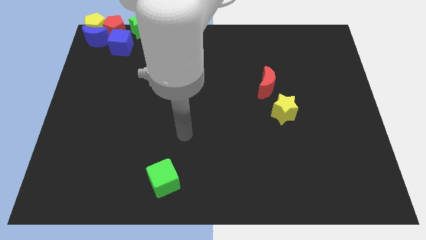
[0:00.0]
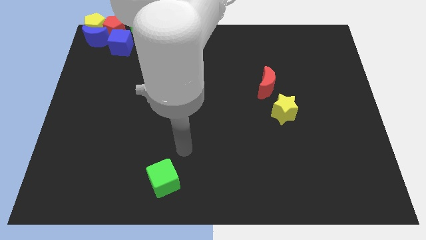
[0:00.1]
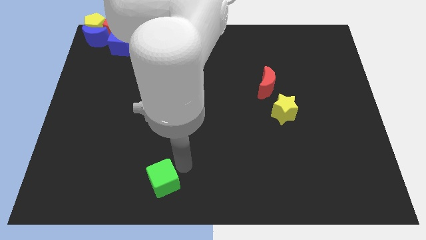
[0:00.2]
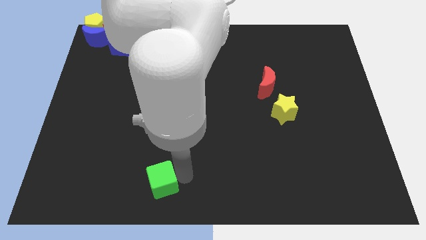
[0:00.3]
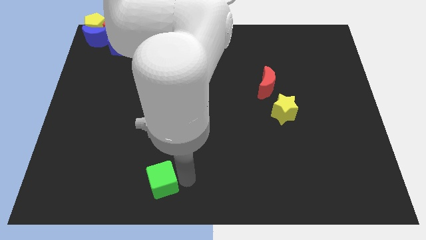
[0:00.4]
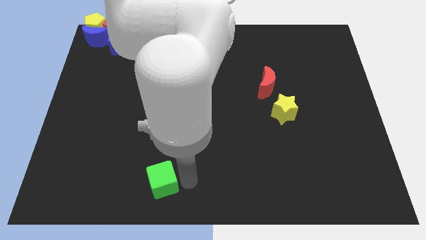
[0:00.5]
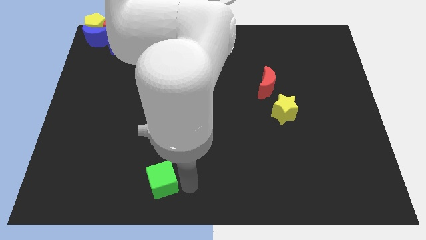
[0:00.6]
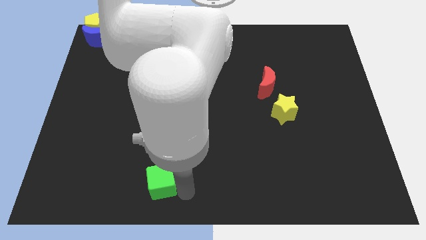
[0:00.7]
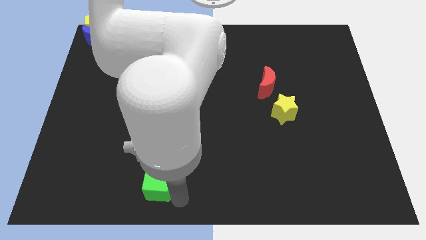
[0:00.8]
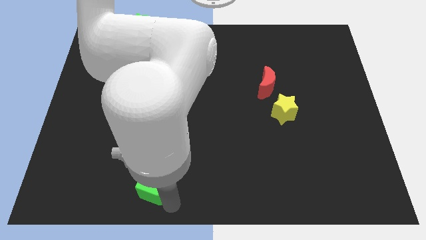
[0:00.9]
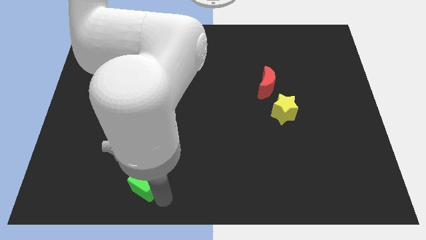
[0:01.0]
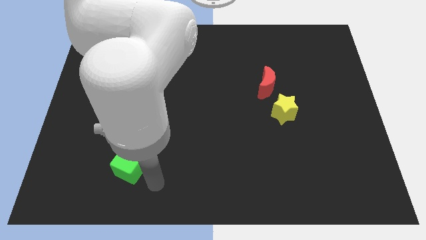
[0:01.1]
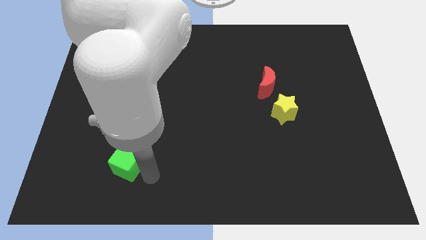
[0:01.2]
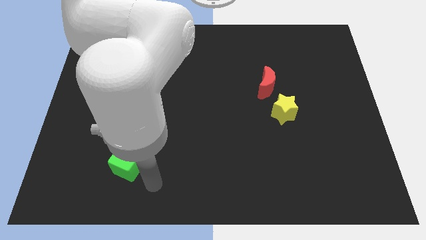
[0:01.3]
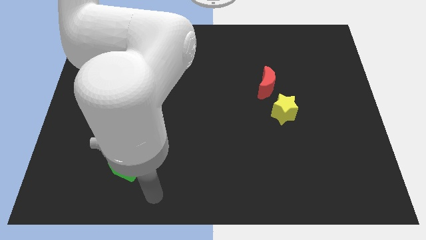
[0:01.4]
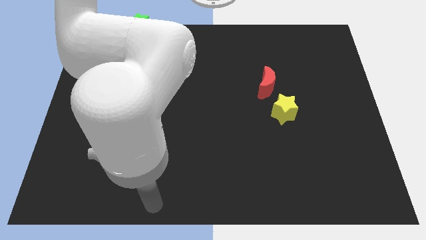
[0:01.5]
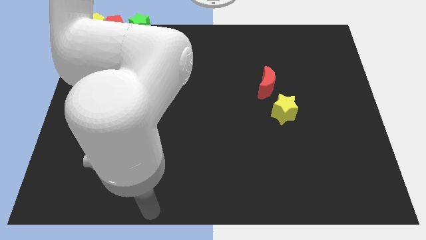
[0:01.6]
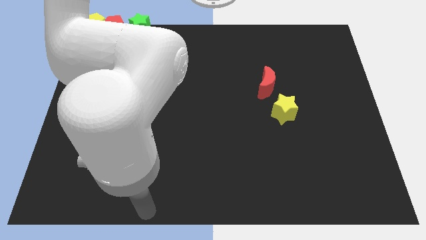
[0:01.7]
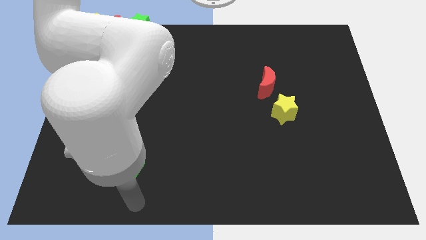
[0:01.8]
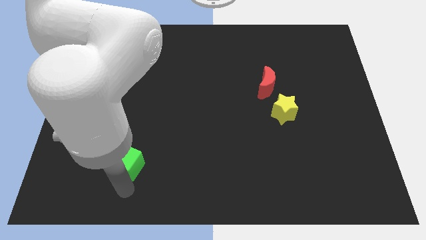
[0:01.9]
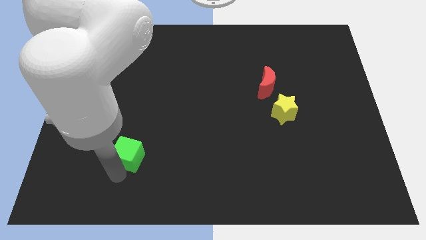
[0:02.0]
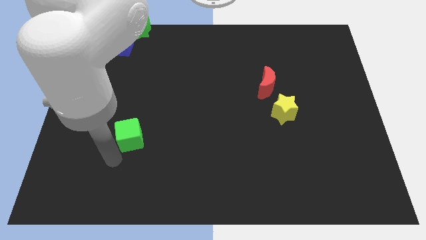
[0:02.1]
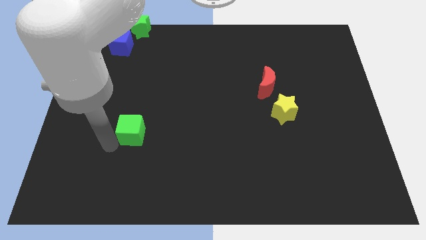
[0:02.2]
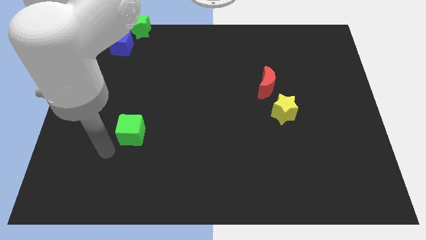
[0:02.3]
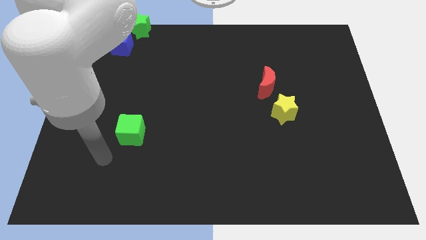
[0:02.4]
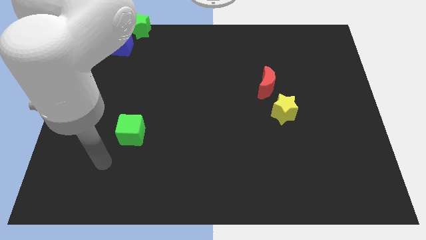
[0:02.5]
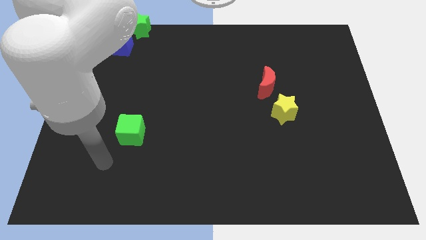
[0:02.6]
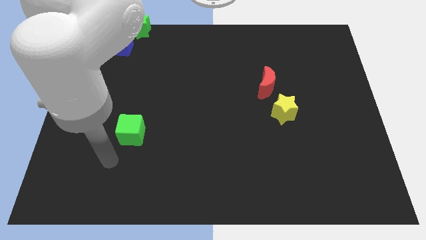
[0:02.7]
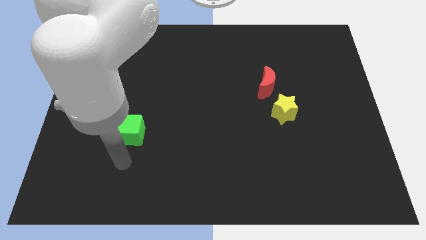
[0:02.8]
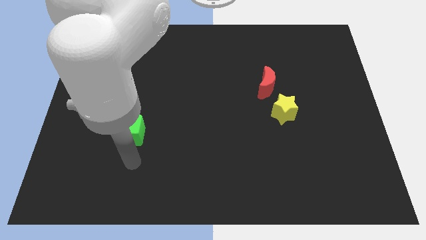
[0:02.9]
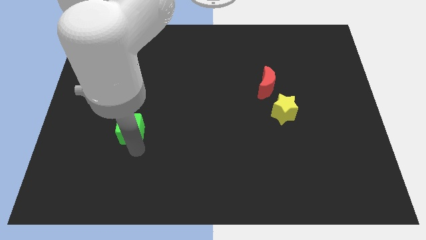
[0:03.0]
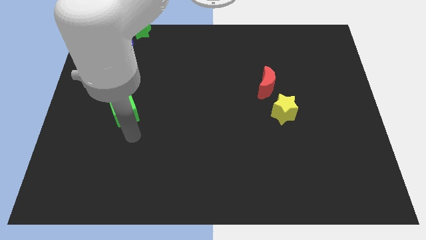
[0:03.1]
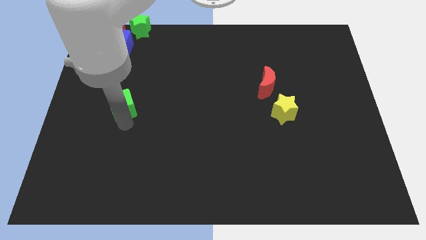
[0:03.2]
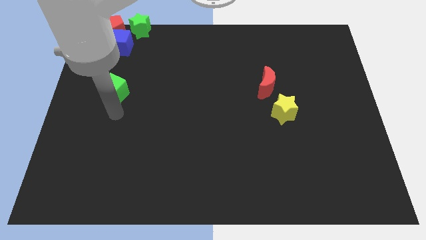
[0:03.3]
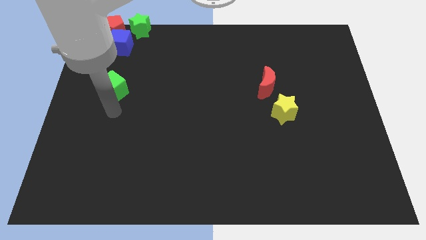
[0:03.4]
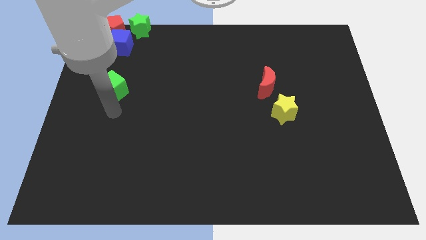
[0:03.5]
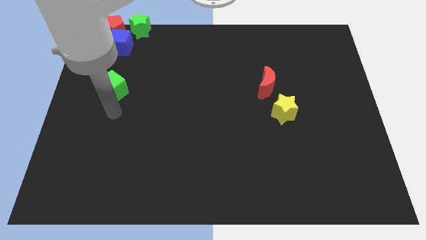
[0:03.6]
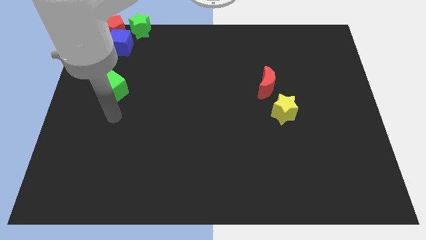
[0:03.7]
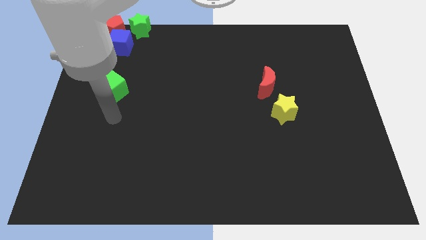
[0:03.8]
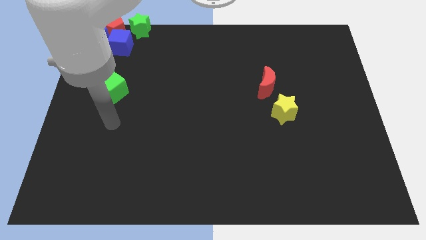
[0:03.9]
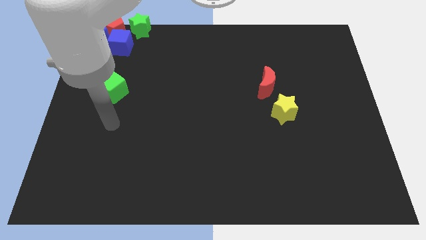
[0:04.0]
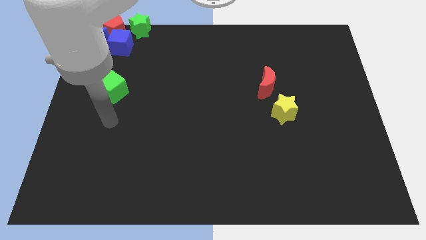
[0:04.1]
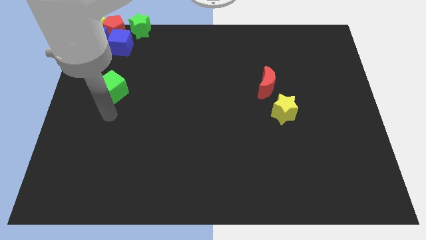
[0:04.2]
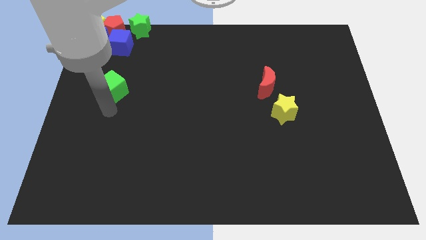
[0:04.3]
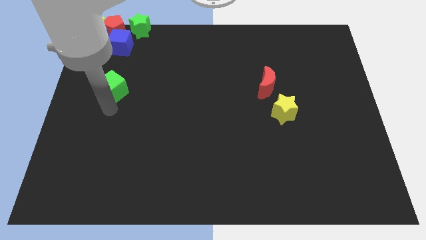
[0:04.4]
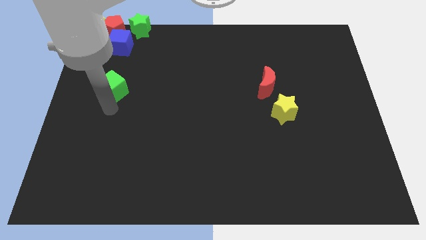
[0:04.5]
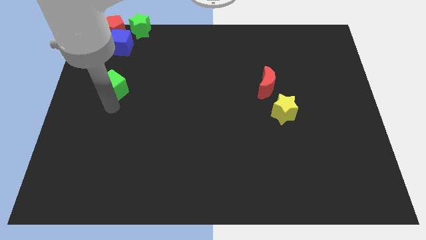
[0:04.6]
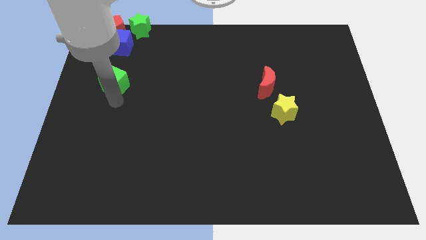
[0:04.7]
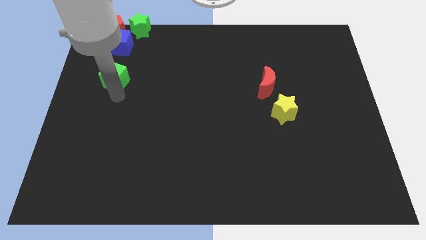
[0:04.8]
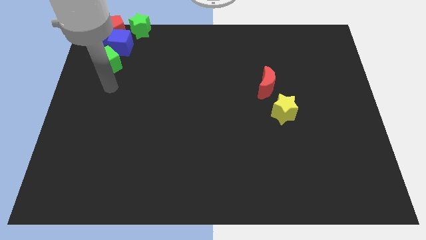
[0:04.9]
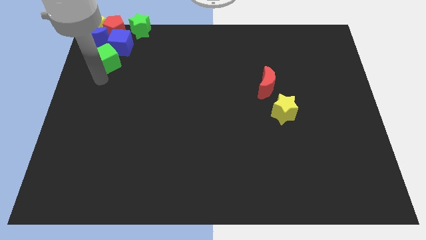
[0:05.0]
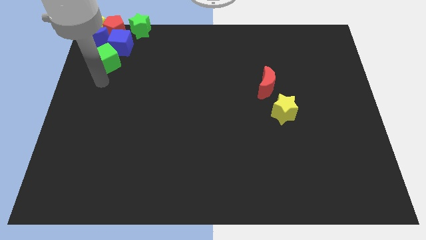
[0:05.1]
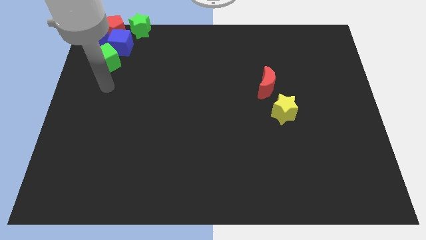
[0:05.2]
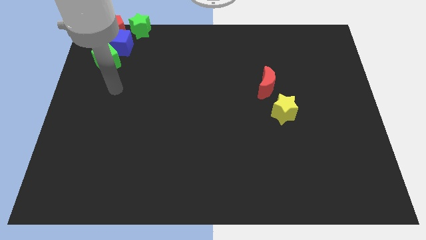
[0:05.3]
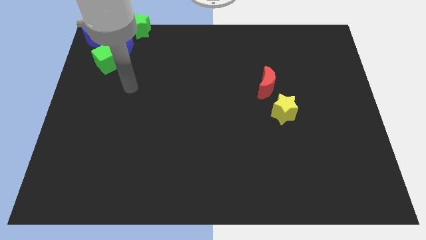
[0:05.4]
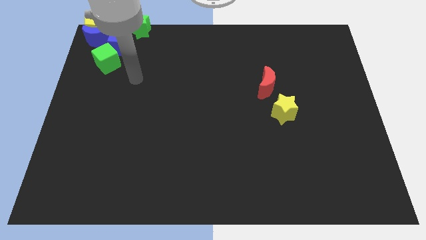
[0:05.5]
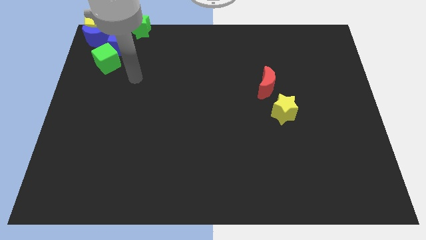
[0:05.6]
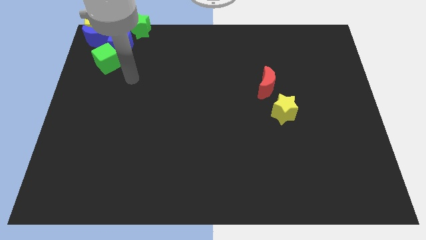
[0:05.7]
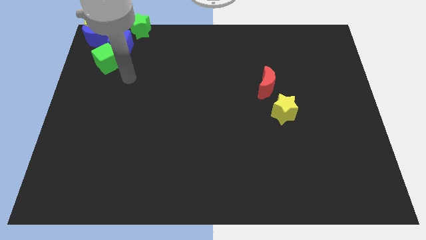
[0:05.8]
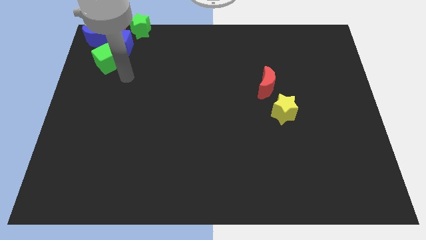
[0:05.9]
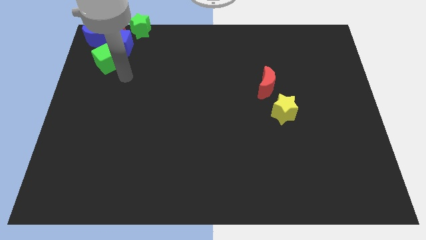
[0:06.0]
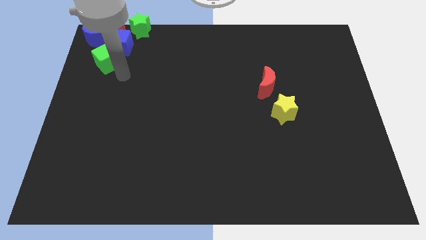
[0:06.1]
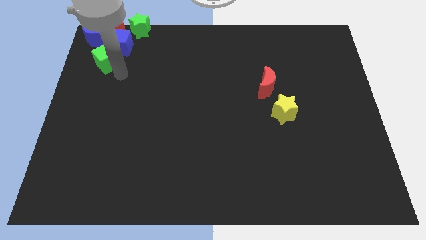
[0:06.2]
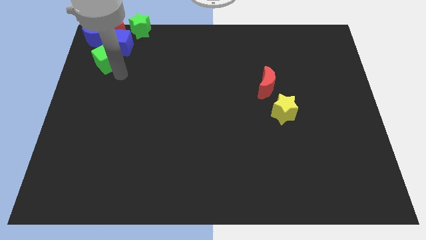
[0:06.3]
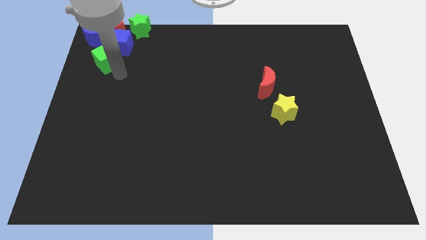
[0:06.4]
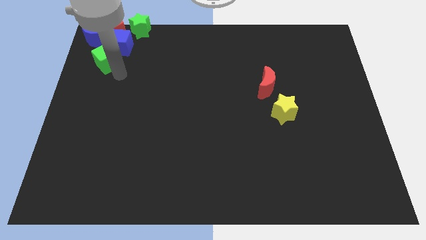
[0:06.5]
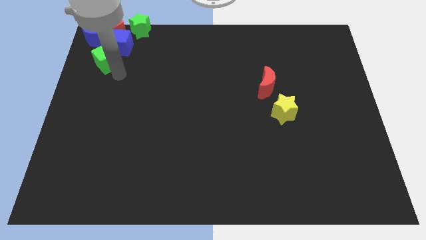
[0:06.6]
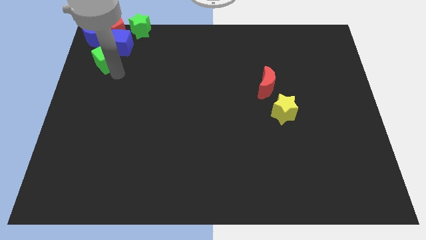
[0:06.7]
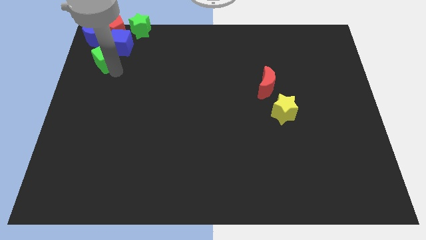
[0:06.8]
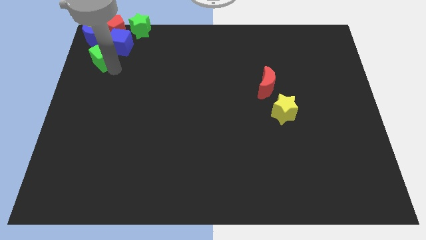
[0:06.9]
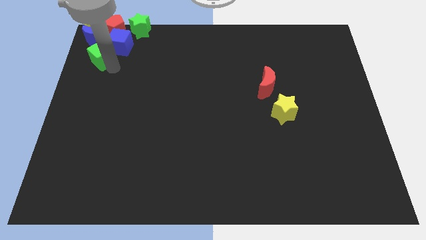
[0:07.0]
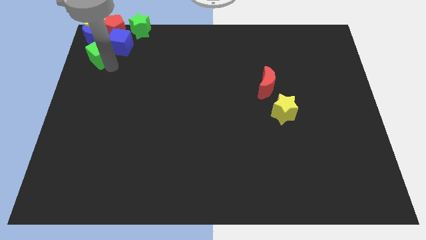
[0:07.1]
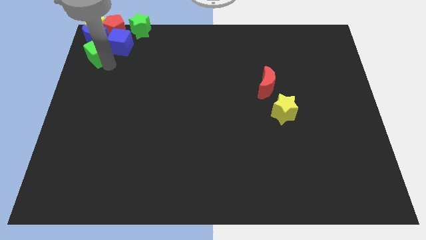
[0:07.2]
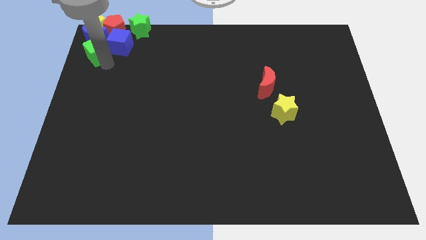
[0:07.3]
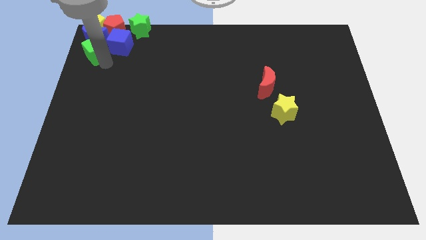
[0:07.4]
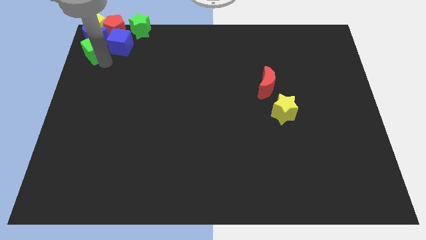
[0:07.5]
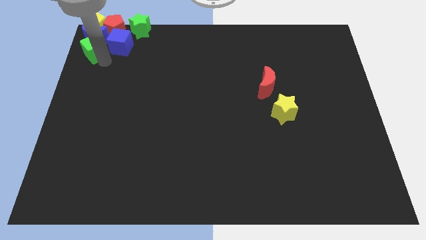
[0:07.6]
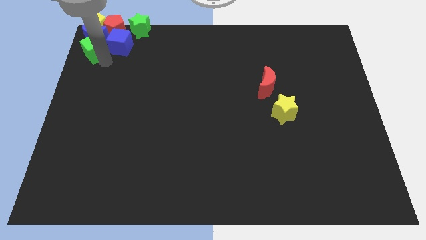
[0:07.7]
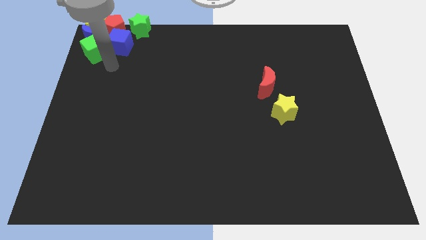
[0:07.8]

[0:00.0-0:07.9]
push the green cube to the bottom of the blue moon

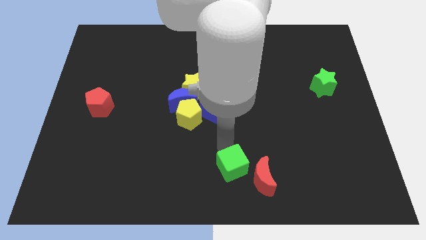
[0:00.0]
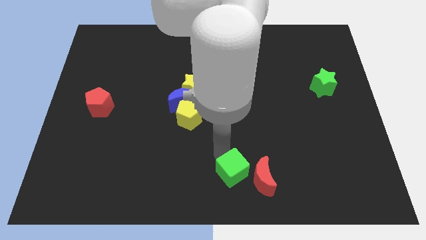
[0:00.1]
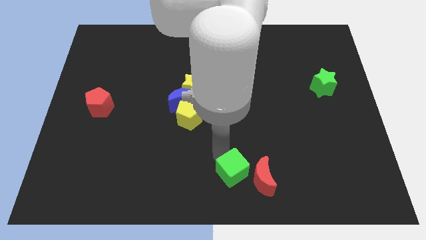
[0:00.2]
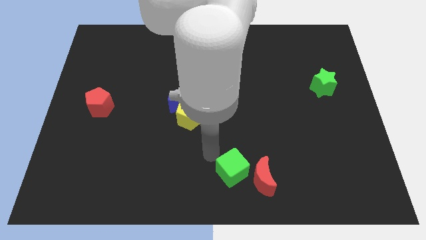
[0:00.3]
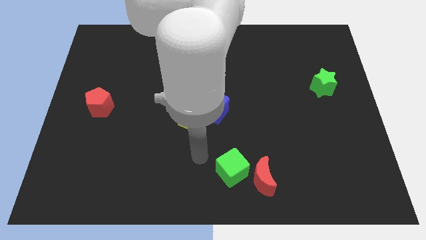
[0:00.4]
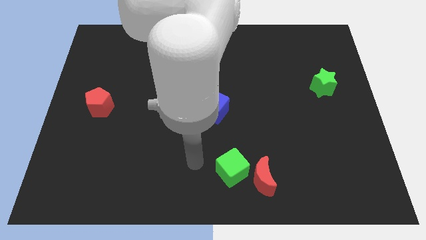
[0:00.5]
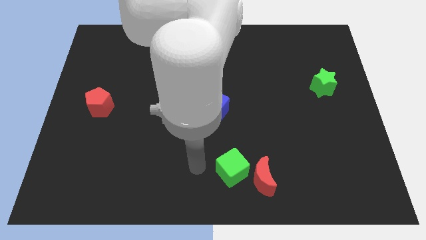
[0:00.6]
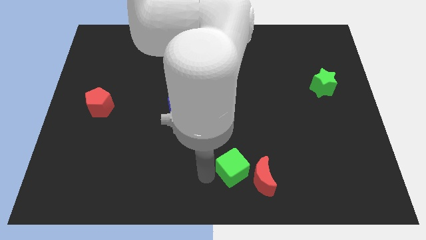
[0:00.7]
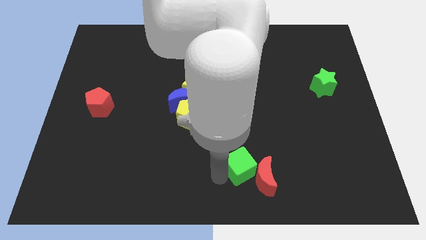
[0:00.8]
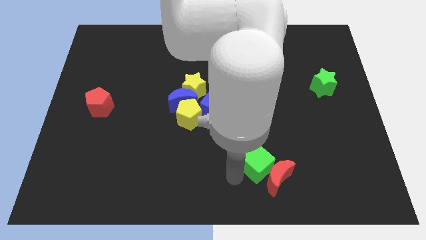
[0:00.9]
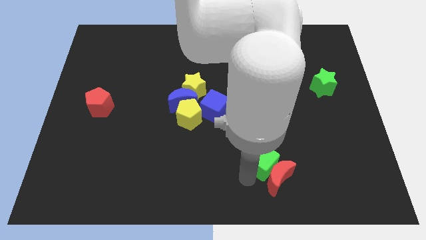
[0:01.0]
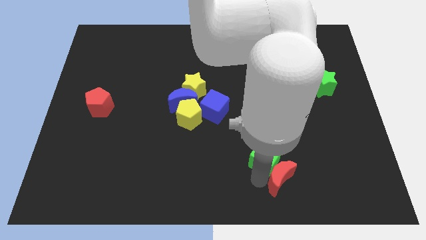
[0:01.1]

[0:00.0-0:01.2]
push the green cube into the red crescent

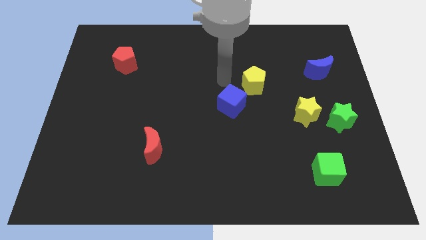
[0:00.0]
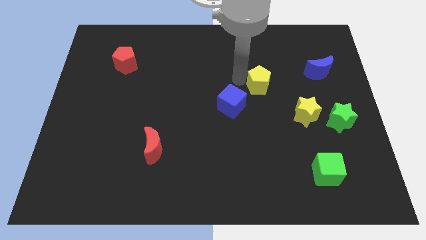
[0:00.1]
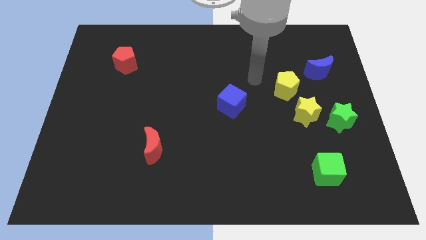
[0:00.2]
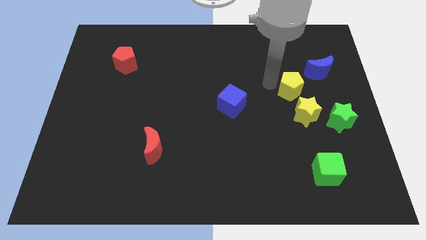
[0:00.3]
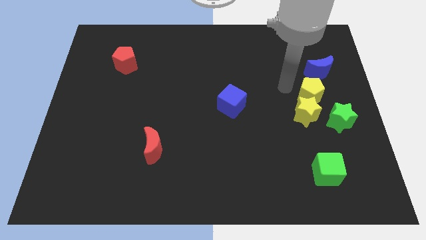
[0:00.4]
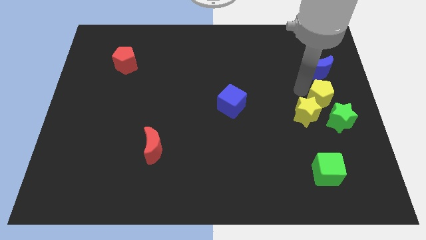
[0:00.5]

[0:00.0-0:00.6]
push yellow pentagon above yellow star
